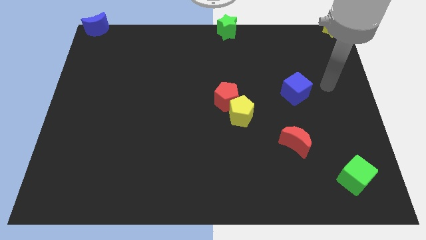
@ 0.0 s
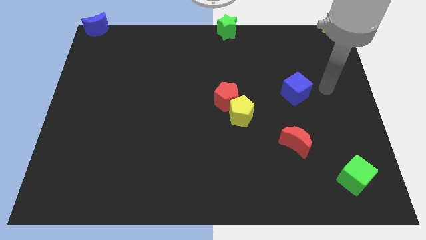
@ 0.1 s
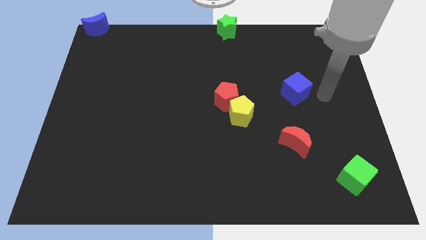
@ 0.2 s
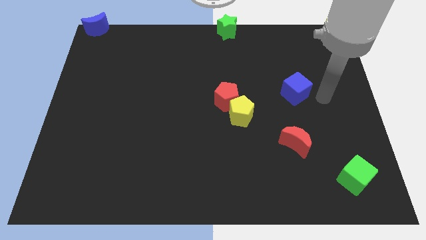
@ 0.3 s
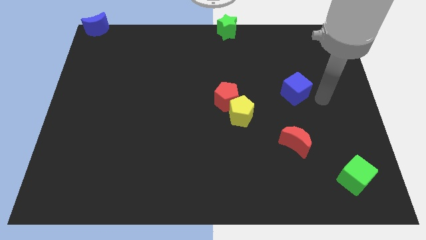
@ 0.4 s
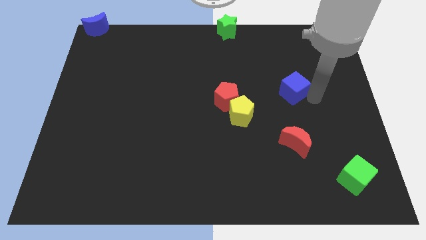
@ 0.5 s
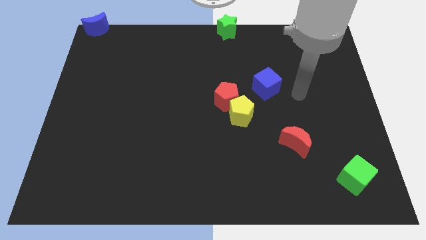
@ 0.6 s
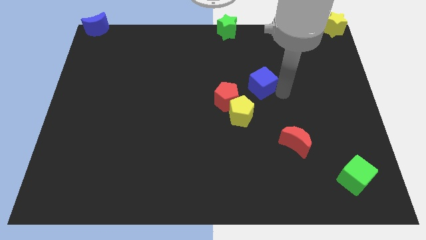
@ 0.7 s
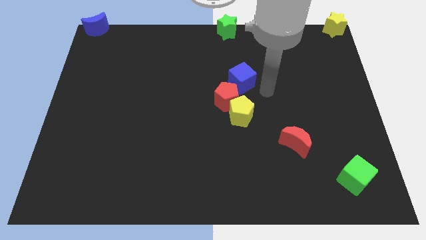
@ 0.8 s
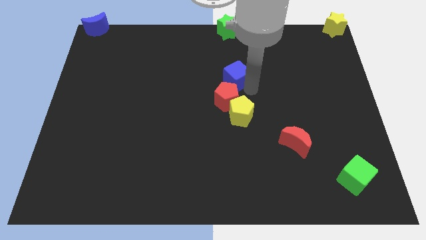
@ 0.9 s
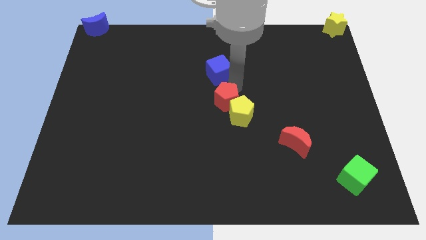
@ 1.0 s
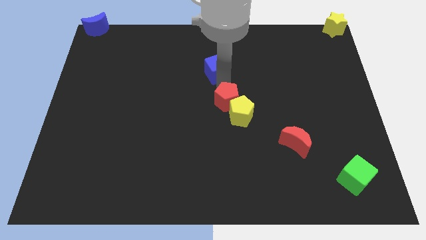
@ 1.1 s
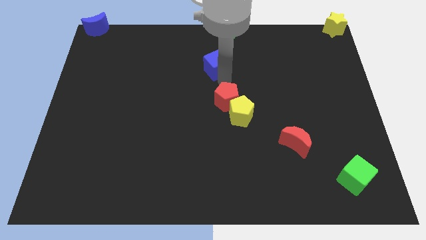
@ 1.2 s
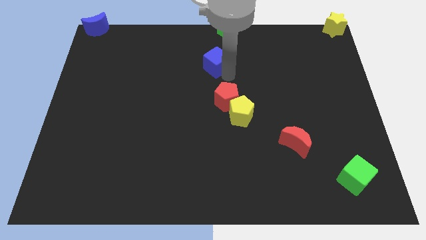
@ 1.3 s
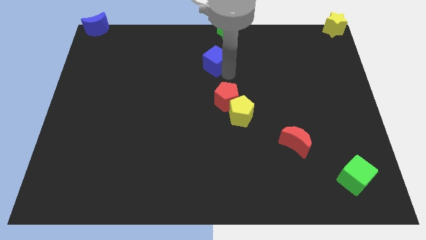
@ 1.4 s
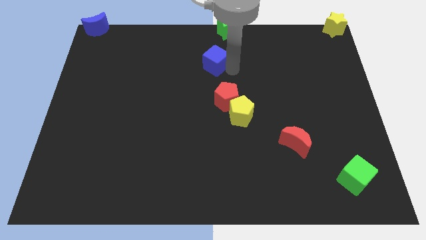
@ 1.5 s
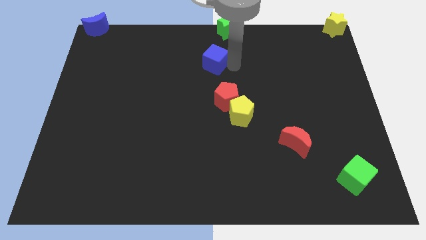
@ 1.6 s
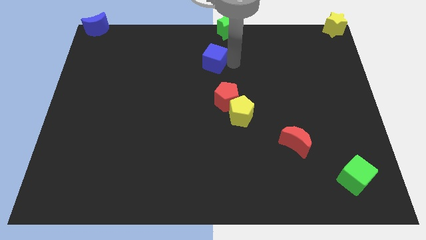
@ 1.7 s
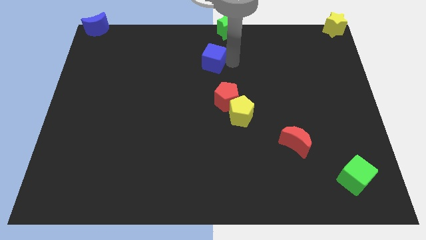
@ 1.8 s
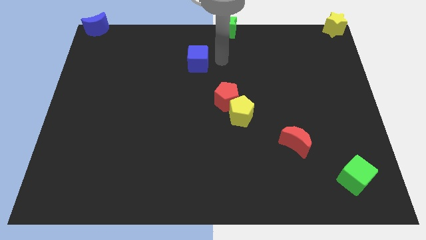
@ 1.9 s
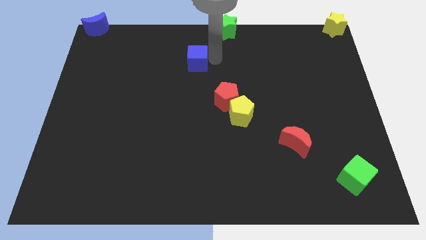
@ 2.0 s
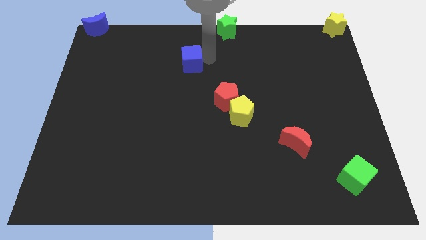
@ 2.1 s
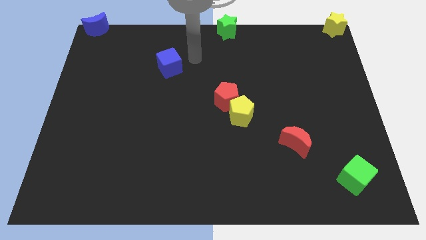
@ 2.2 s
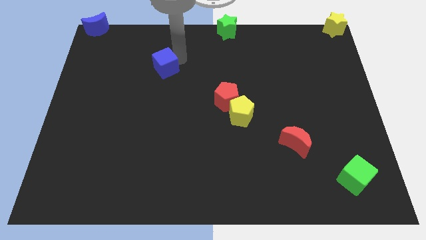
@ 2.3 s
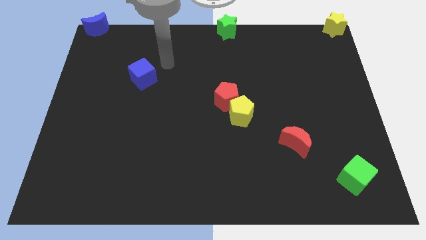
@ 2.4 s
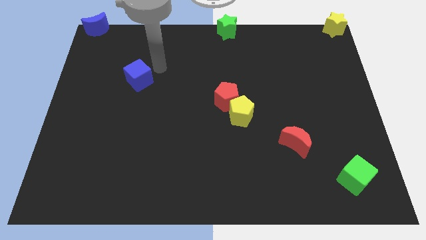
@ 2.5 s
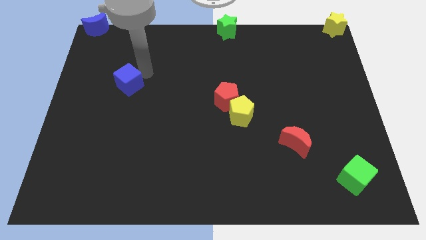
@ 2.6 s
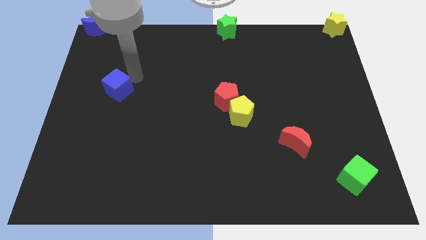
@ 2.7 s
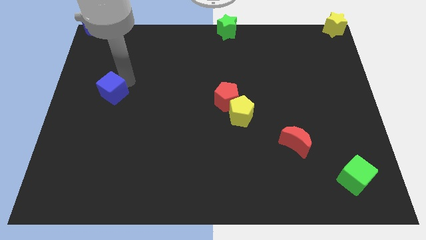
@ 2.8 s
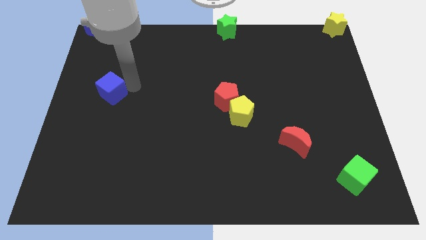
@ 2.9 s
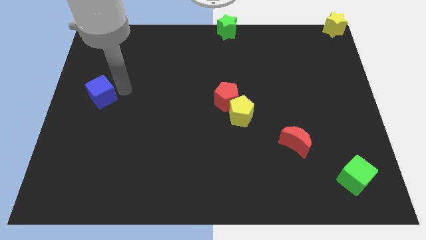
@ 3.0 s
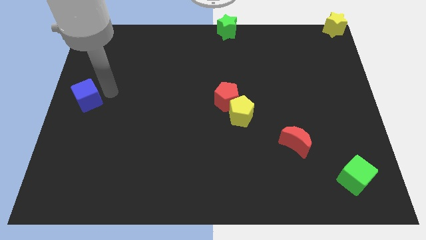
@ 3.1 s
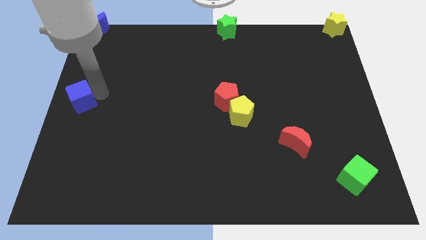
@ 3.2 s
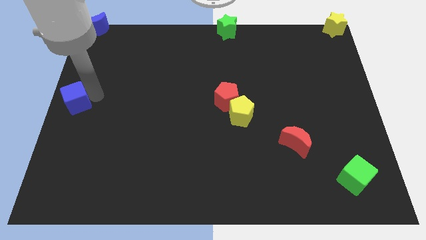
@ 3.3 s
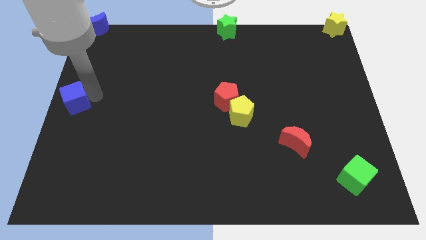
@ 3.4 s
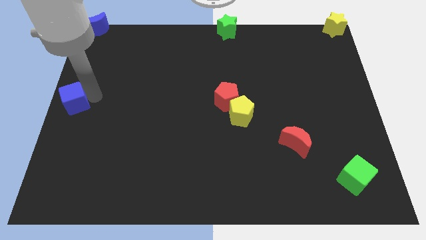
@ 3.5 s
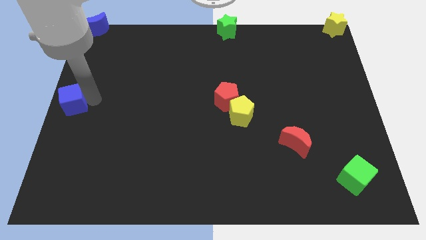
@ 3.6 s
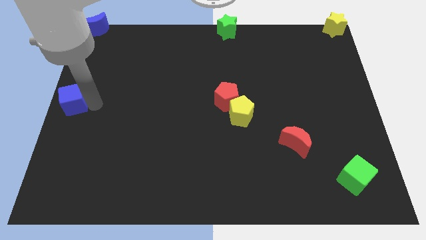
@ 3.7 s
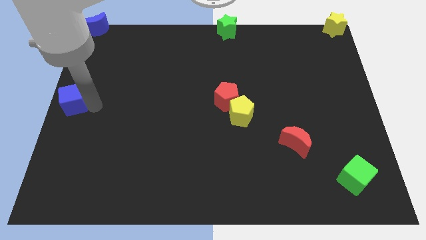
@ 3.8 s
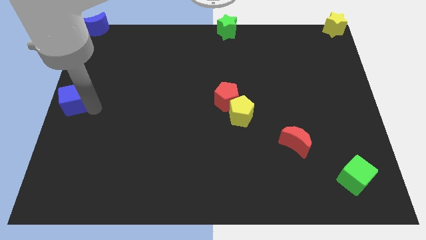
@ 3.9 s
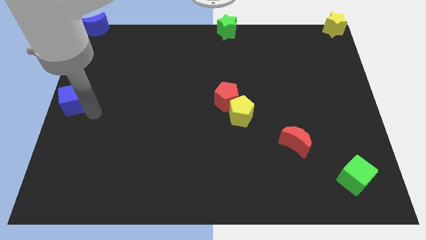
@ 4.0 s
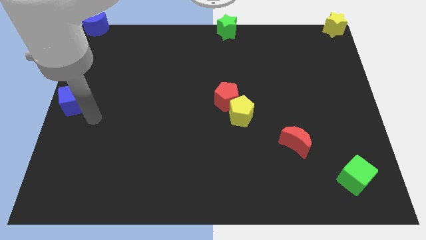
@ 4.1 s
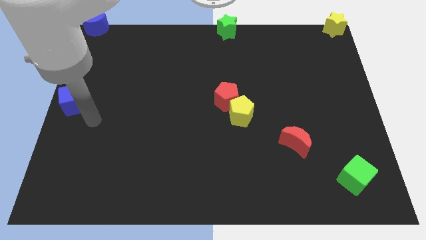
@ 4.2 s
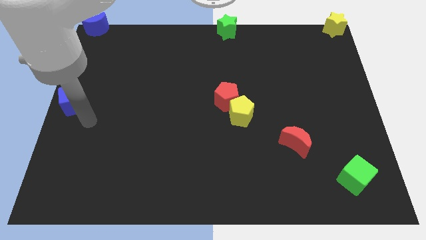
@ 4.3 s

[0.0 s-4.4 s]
move the blue cube to the left center of the board

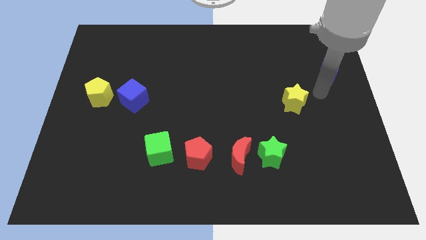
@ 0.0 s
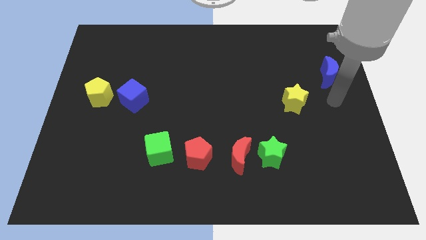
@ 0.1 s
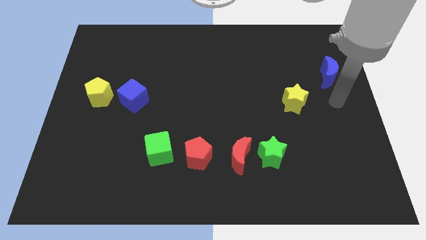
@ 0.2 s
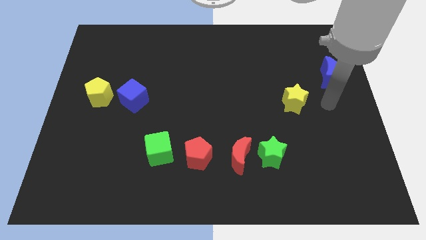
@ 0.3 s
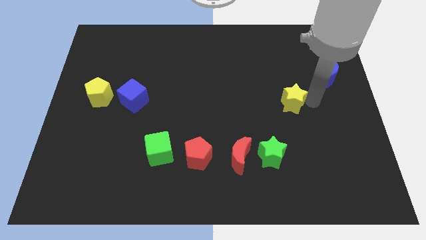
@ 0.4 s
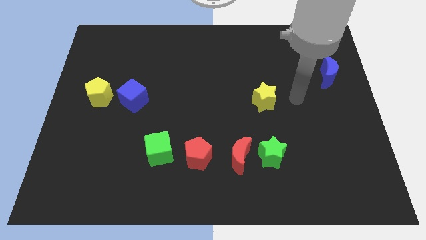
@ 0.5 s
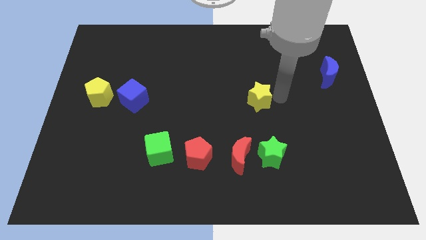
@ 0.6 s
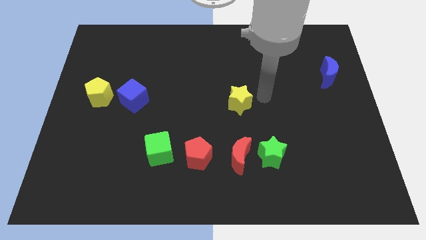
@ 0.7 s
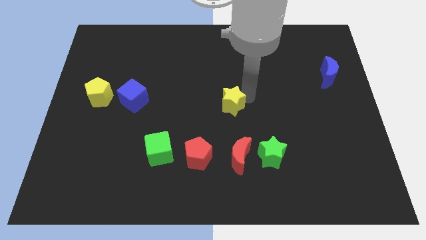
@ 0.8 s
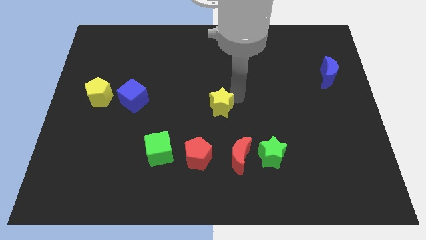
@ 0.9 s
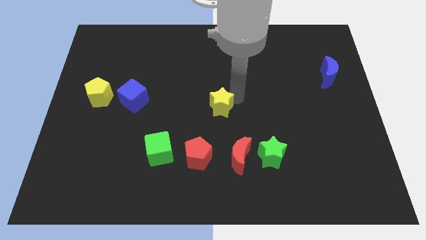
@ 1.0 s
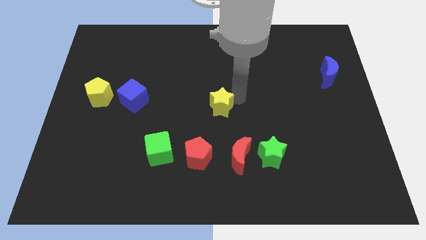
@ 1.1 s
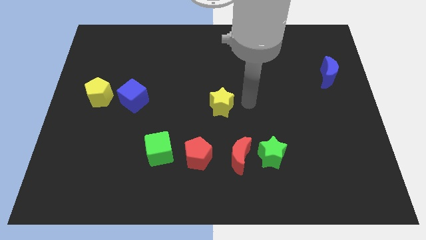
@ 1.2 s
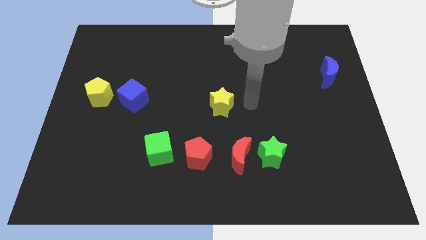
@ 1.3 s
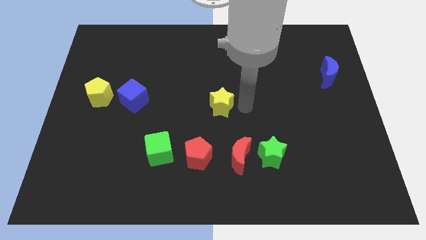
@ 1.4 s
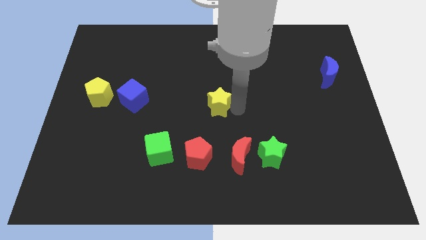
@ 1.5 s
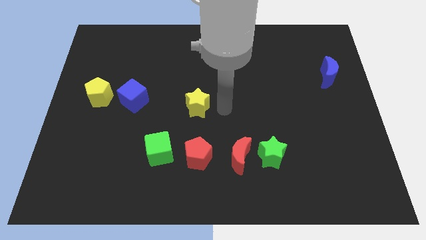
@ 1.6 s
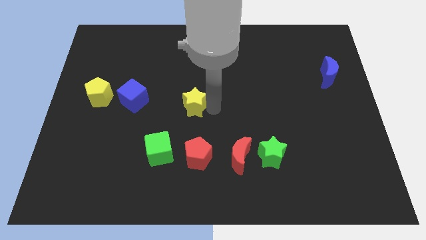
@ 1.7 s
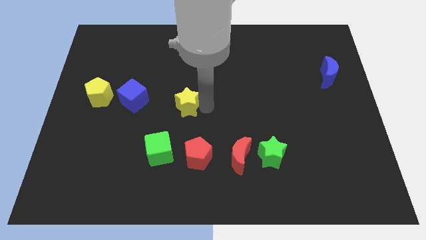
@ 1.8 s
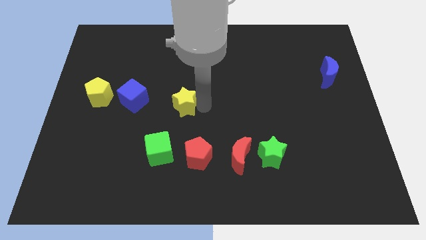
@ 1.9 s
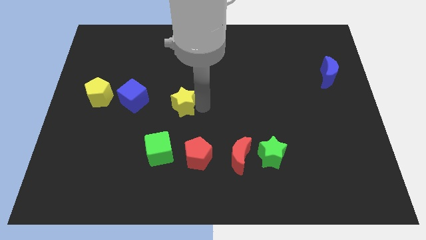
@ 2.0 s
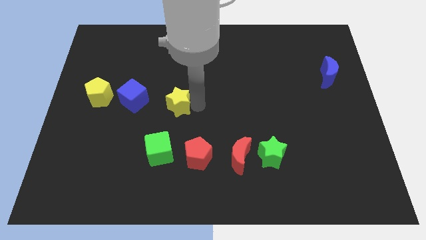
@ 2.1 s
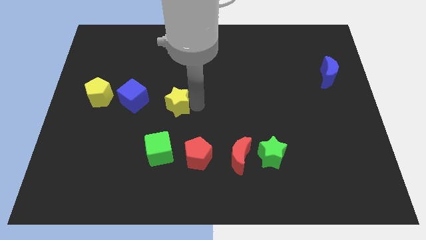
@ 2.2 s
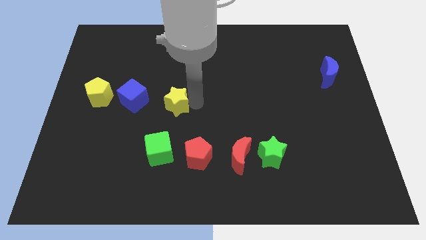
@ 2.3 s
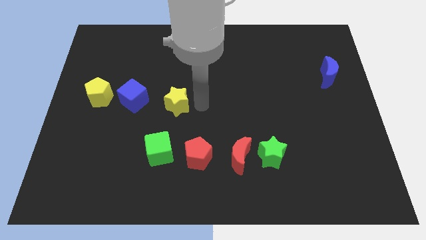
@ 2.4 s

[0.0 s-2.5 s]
place the yellow star vertically at the top side of the green cube

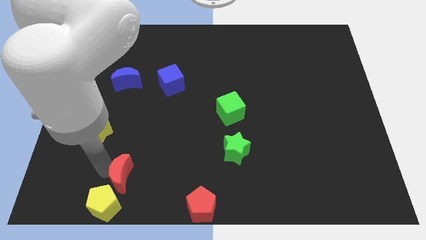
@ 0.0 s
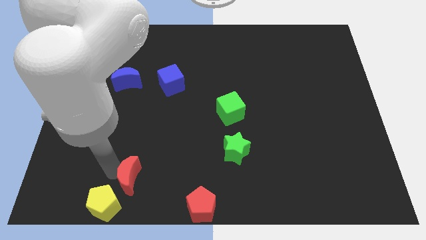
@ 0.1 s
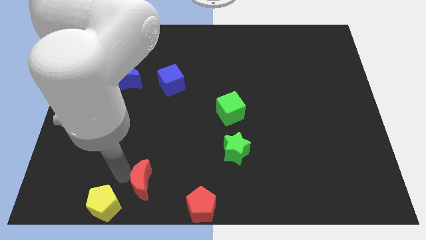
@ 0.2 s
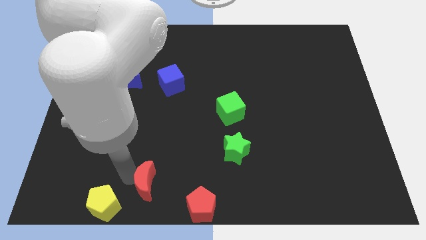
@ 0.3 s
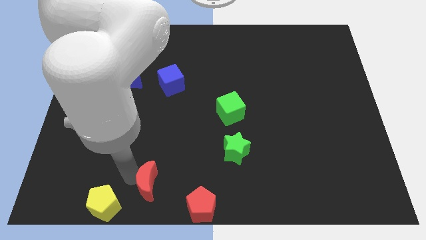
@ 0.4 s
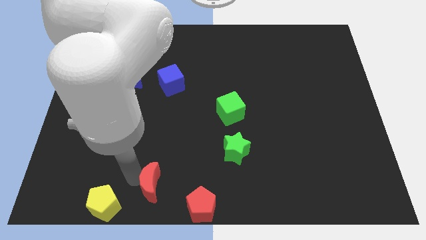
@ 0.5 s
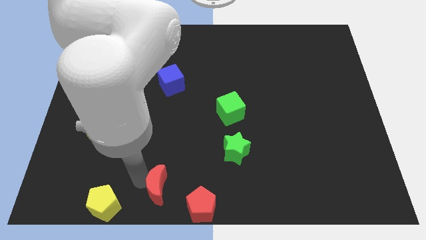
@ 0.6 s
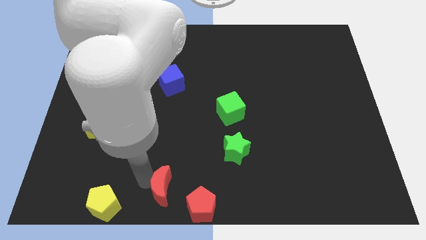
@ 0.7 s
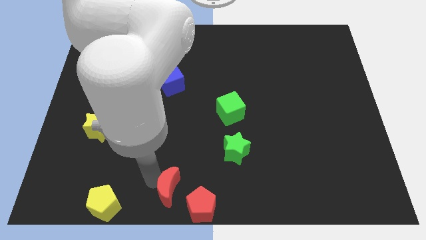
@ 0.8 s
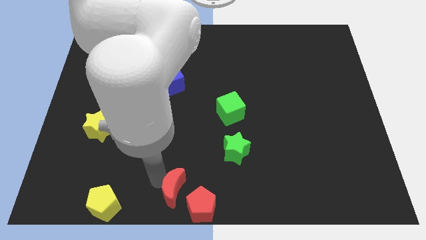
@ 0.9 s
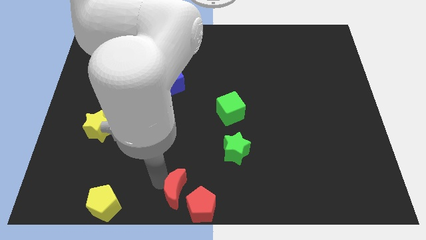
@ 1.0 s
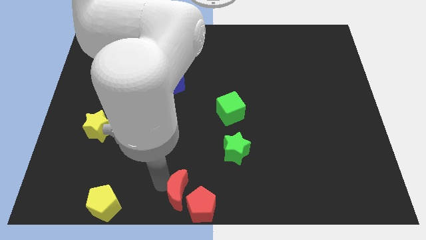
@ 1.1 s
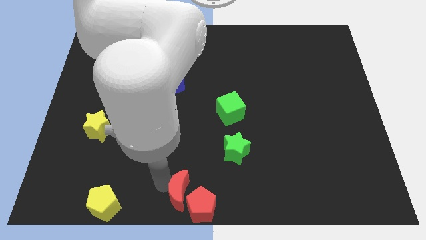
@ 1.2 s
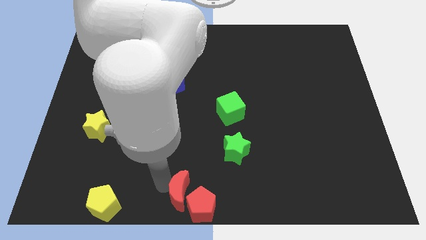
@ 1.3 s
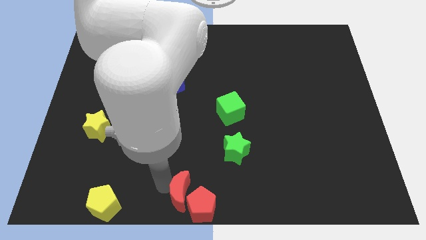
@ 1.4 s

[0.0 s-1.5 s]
move the red crescent close to the red pentagon

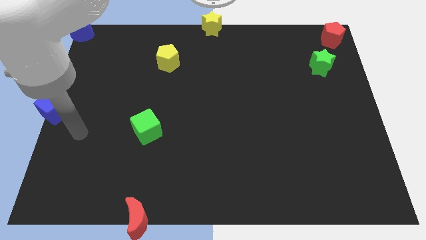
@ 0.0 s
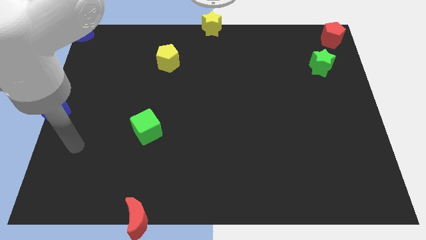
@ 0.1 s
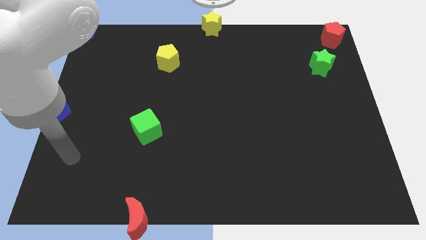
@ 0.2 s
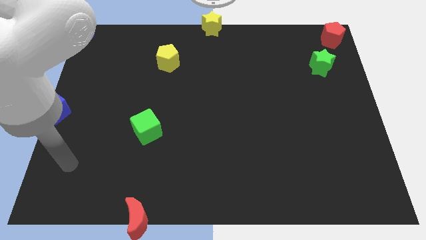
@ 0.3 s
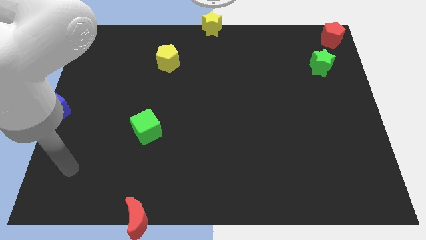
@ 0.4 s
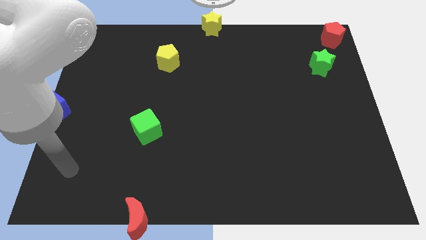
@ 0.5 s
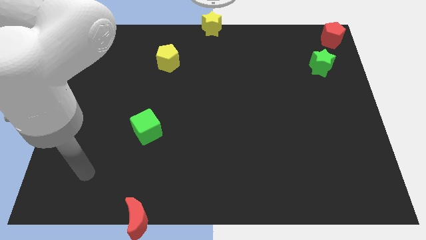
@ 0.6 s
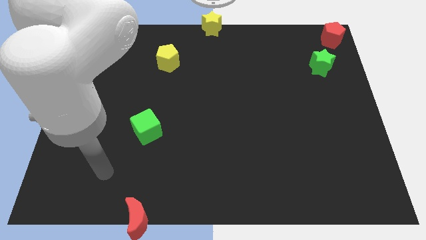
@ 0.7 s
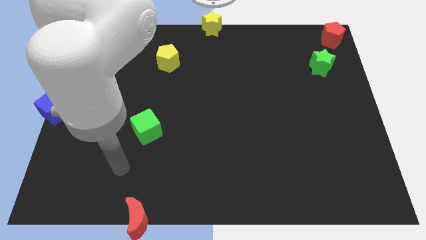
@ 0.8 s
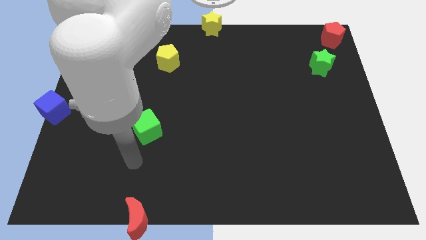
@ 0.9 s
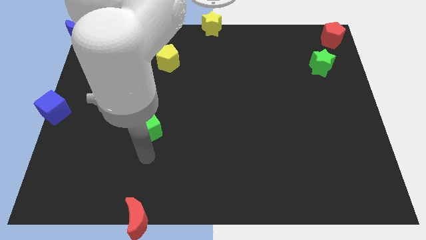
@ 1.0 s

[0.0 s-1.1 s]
place your arm below the green cube
